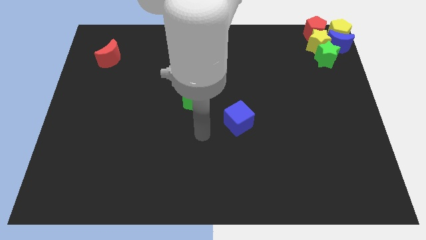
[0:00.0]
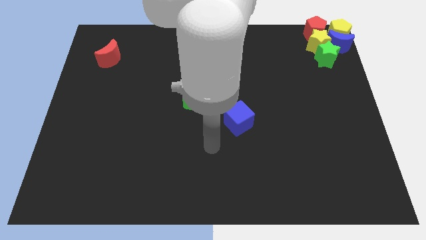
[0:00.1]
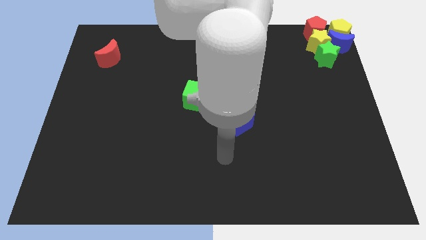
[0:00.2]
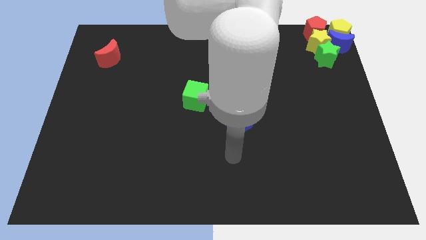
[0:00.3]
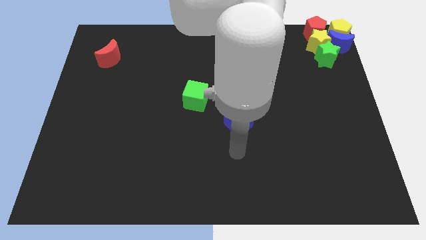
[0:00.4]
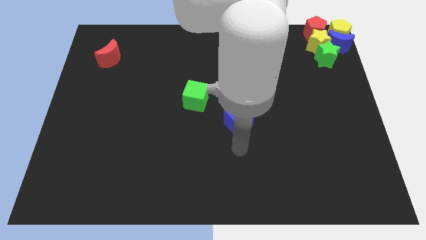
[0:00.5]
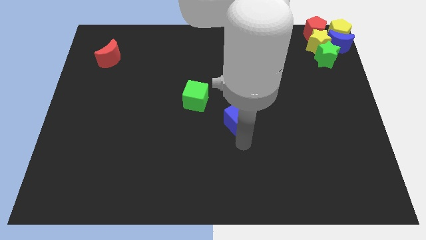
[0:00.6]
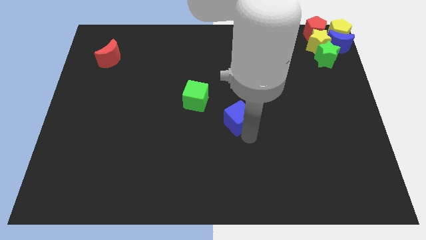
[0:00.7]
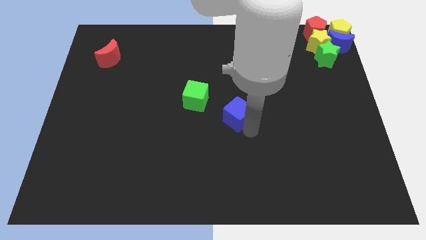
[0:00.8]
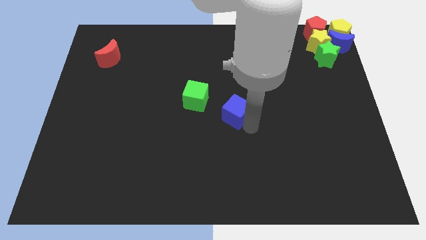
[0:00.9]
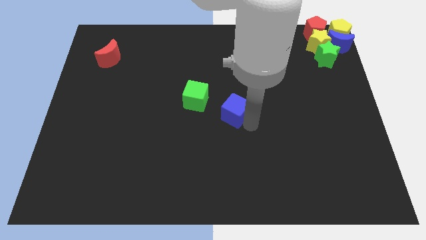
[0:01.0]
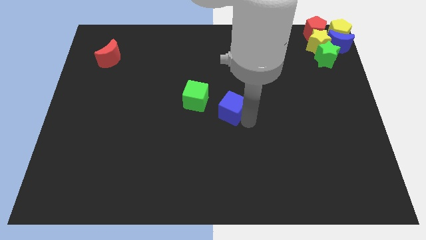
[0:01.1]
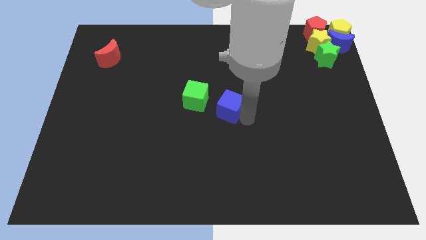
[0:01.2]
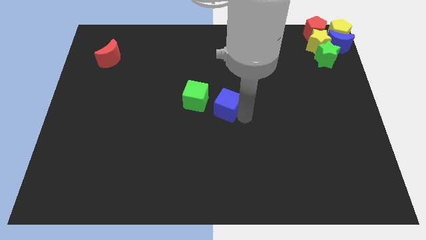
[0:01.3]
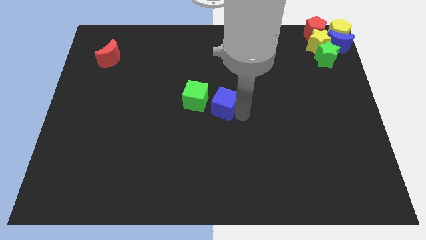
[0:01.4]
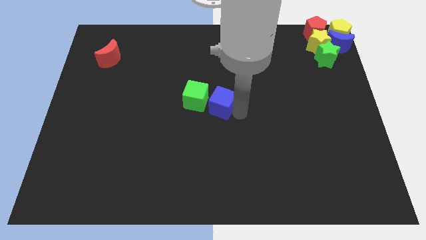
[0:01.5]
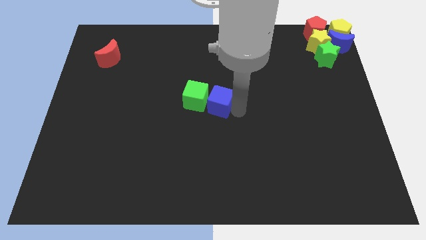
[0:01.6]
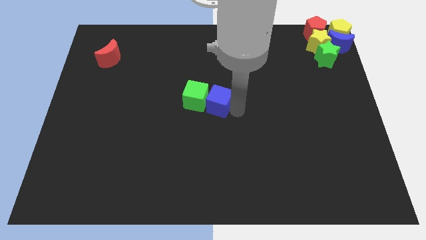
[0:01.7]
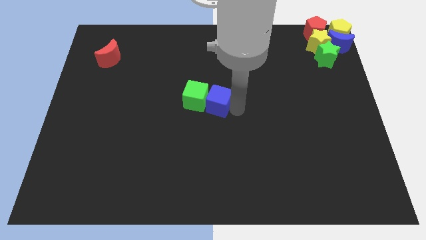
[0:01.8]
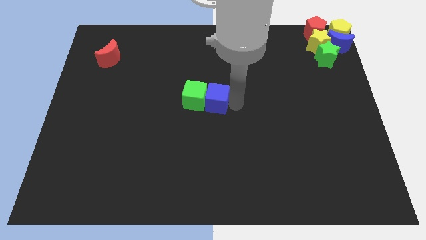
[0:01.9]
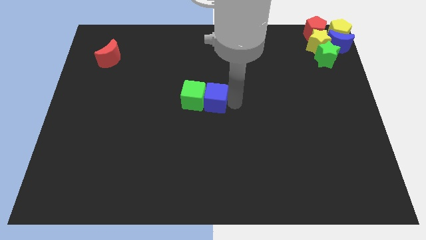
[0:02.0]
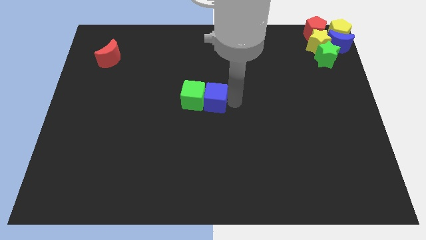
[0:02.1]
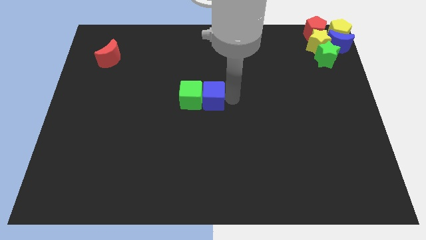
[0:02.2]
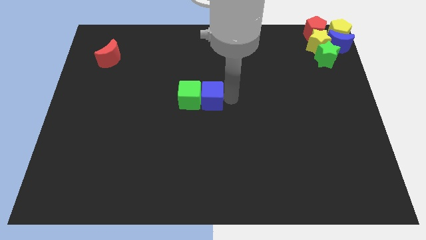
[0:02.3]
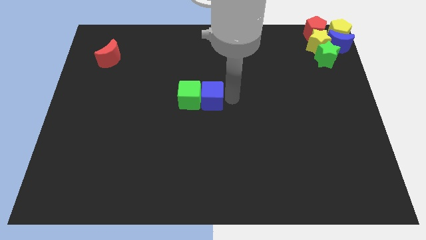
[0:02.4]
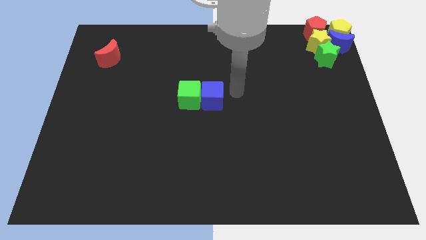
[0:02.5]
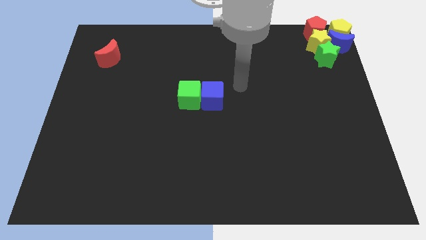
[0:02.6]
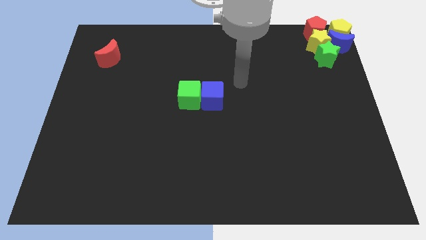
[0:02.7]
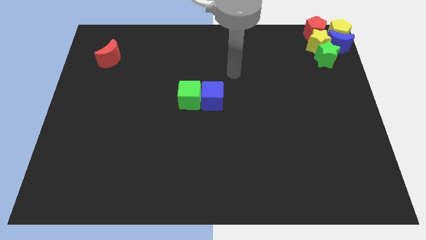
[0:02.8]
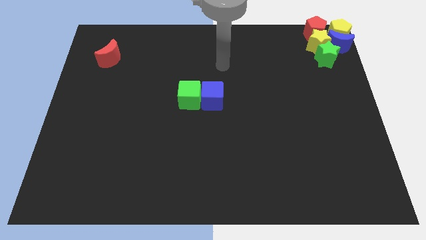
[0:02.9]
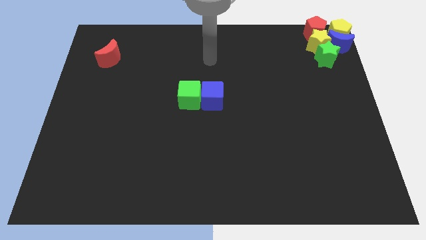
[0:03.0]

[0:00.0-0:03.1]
push the blue cube to the right side of the green cube

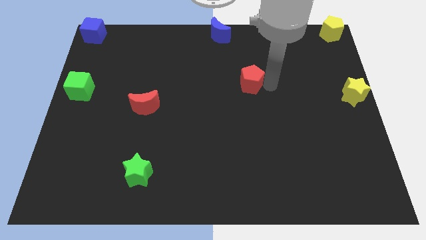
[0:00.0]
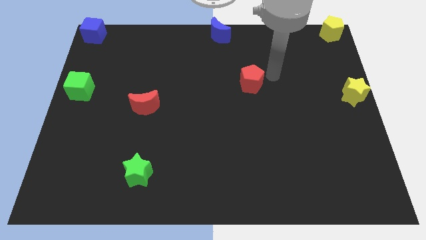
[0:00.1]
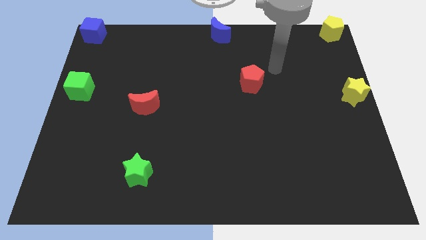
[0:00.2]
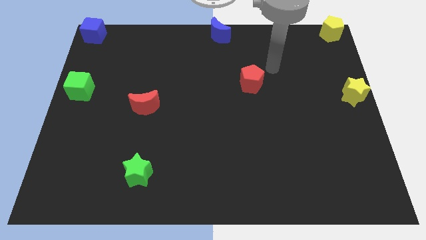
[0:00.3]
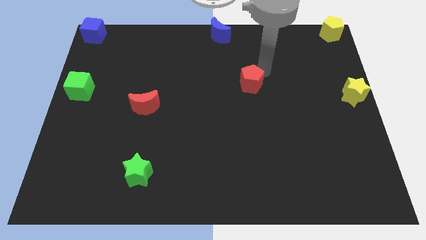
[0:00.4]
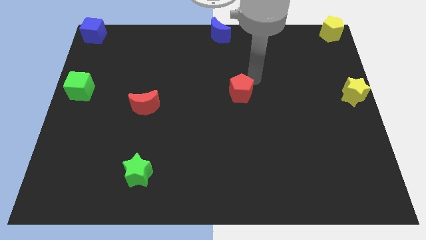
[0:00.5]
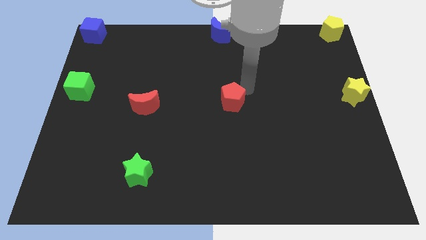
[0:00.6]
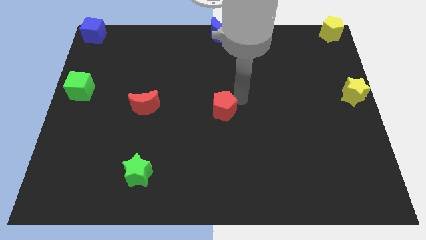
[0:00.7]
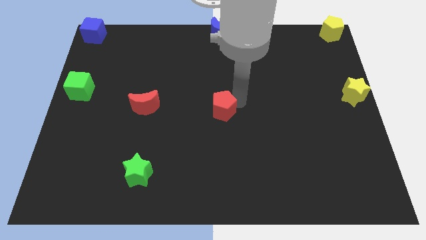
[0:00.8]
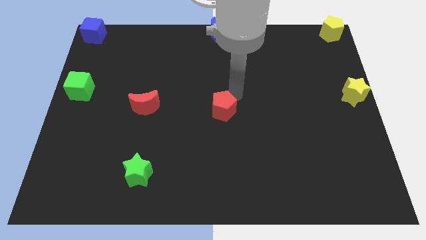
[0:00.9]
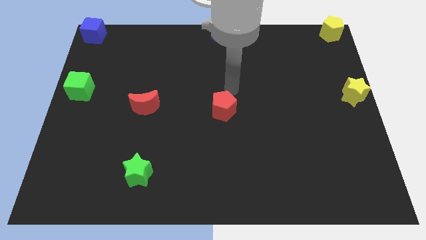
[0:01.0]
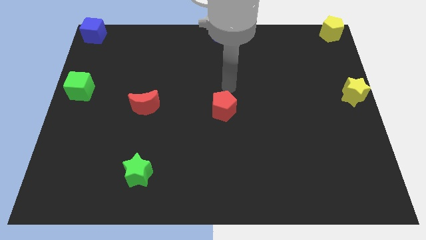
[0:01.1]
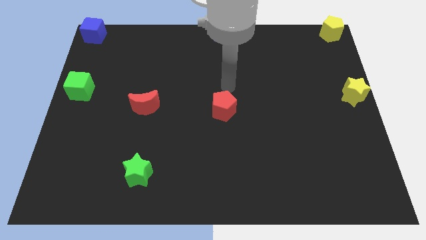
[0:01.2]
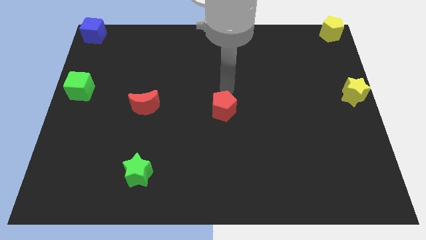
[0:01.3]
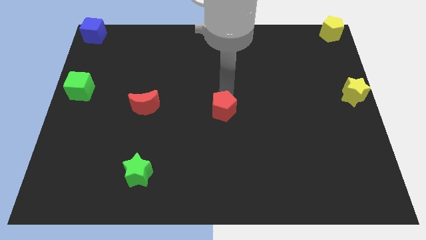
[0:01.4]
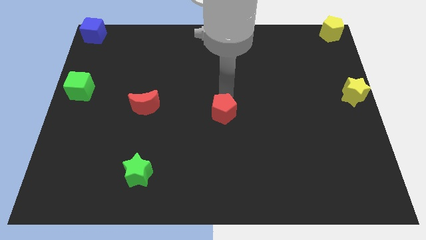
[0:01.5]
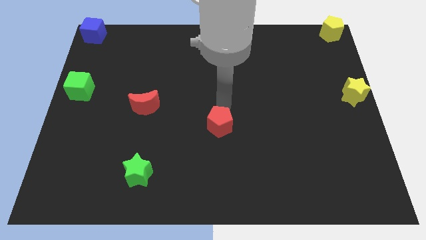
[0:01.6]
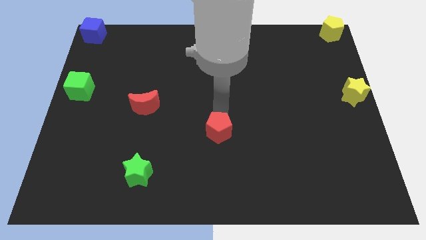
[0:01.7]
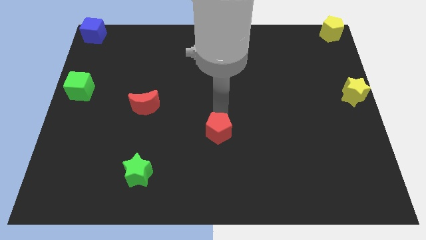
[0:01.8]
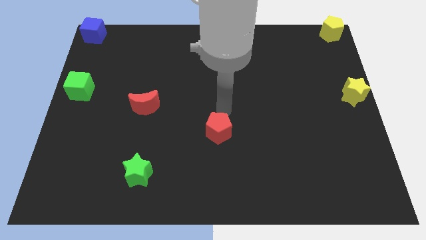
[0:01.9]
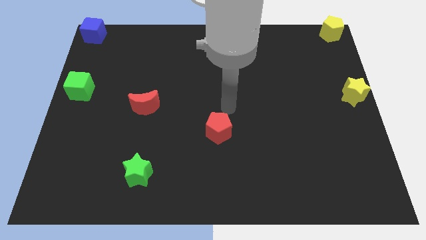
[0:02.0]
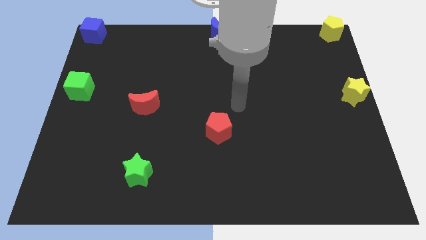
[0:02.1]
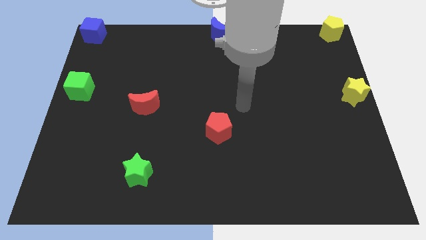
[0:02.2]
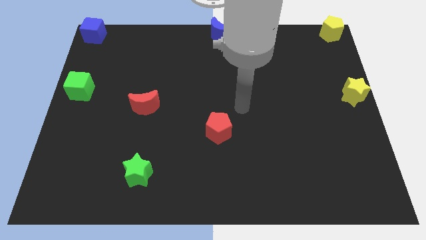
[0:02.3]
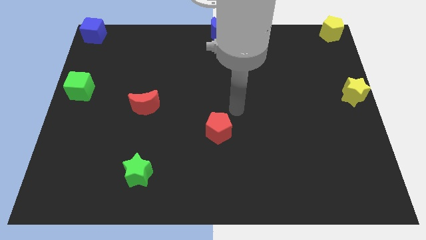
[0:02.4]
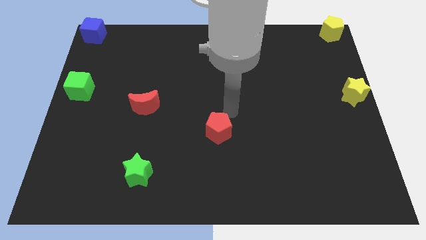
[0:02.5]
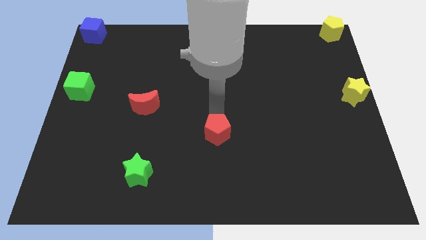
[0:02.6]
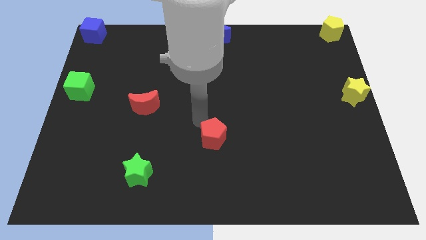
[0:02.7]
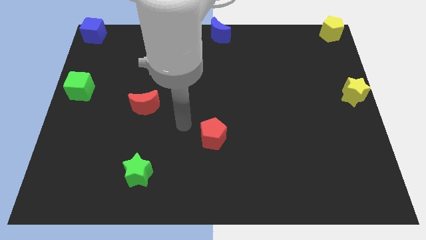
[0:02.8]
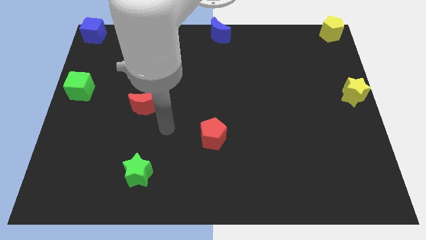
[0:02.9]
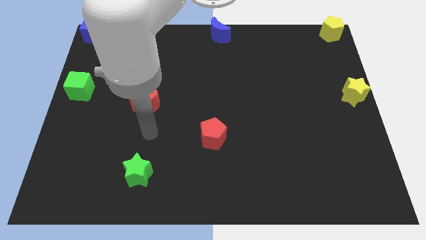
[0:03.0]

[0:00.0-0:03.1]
move the red pentagon to the bottom right of the red crescent

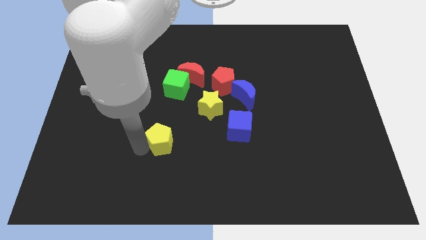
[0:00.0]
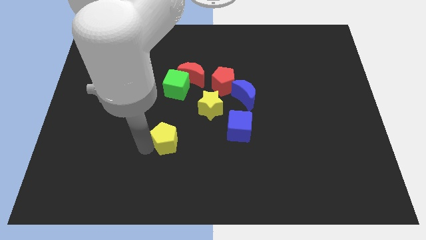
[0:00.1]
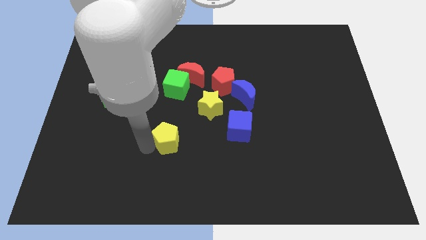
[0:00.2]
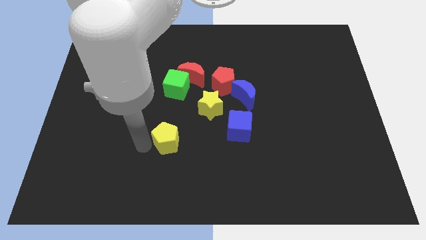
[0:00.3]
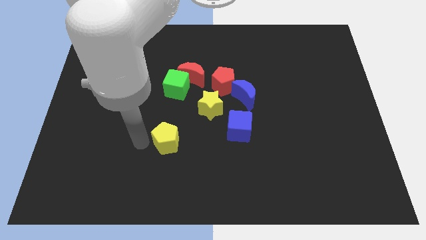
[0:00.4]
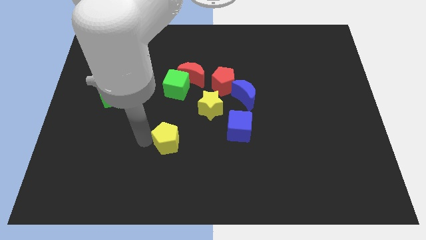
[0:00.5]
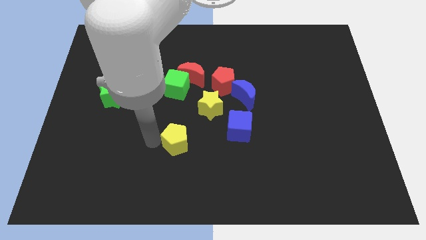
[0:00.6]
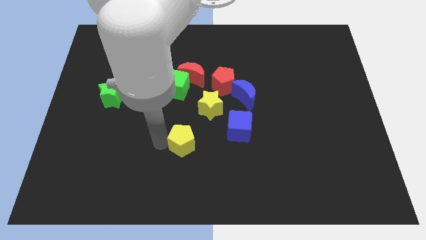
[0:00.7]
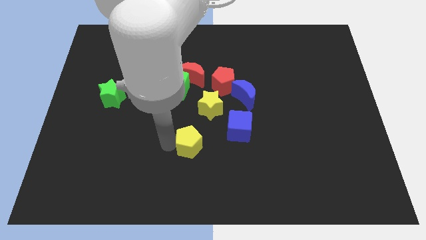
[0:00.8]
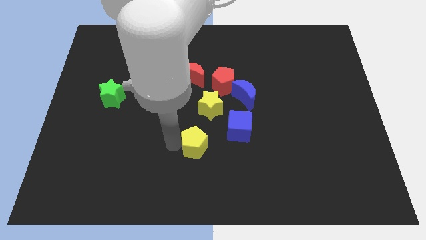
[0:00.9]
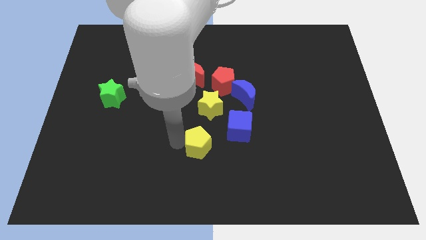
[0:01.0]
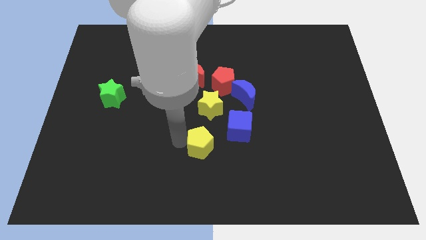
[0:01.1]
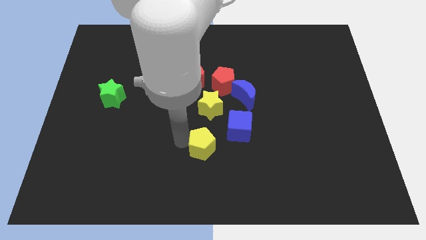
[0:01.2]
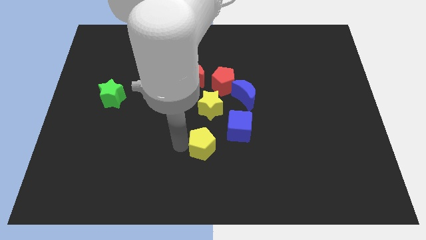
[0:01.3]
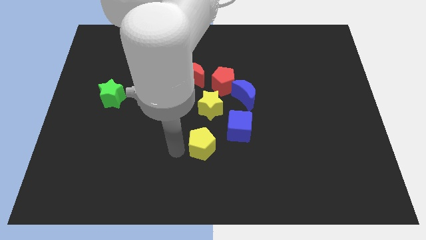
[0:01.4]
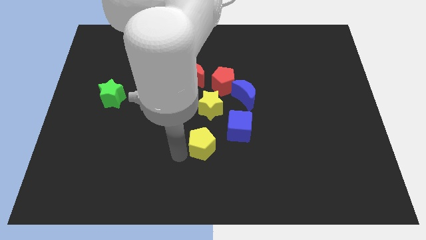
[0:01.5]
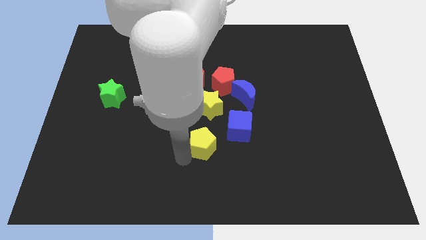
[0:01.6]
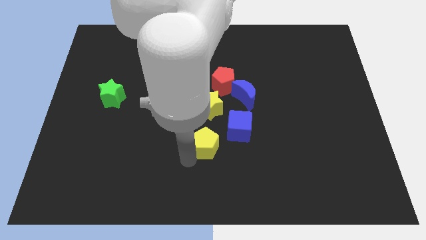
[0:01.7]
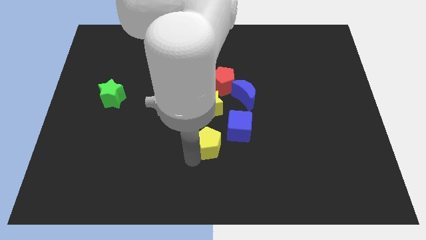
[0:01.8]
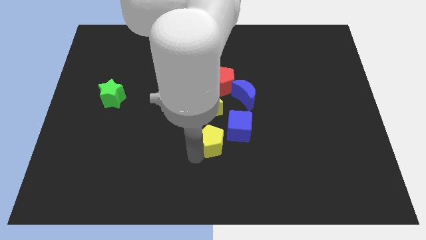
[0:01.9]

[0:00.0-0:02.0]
push the yellow pentagon close to the blue cube

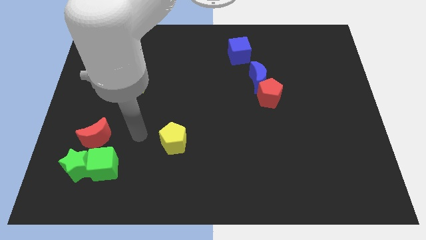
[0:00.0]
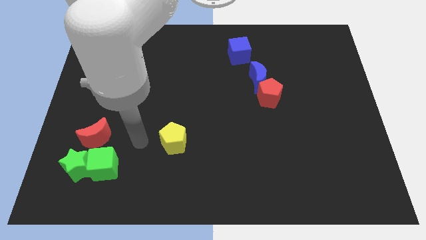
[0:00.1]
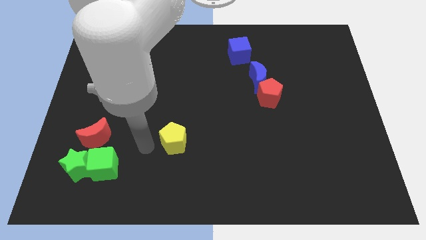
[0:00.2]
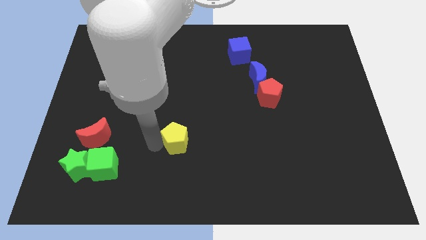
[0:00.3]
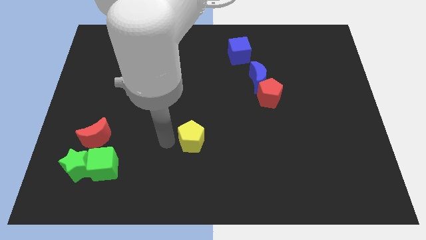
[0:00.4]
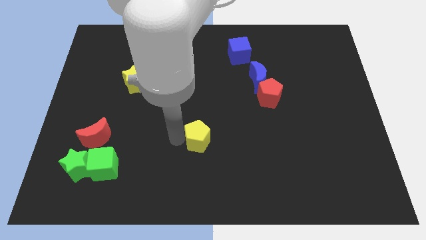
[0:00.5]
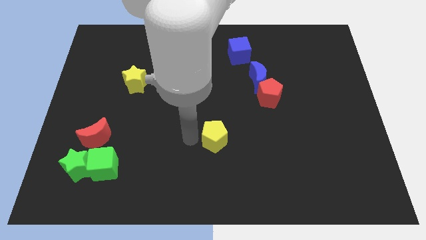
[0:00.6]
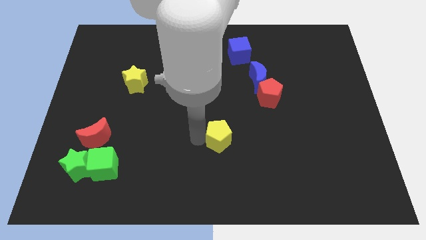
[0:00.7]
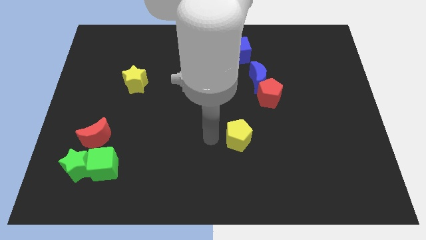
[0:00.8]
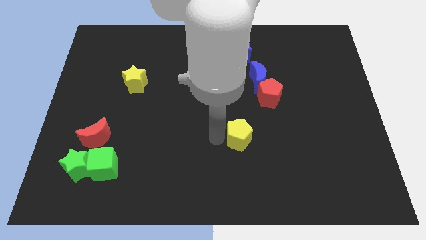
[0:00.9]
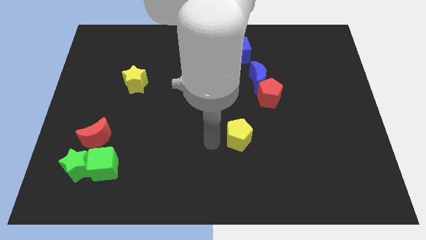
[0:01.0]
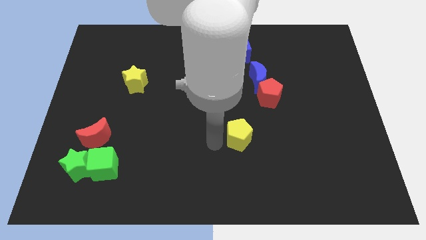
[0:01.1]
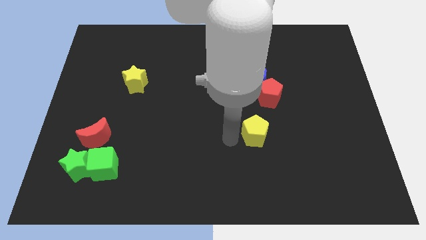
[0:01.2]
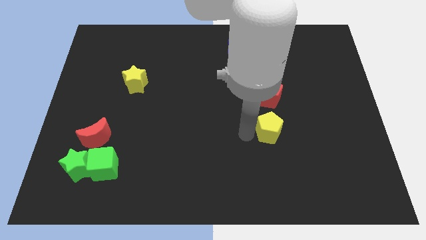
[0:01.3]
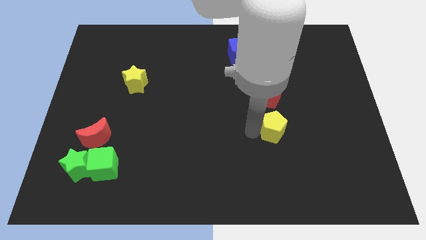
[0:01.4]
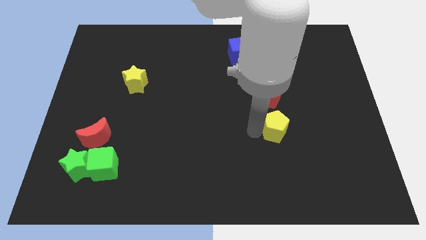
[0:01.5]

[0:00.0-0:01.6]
move the yellow pentagon to the right
